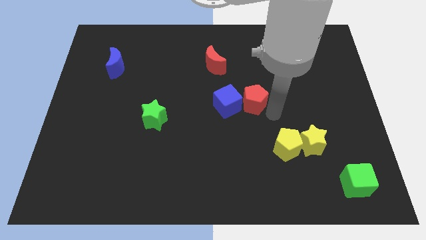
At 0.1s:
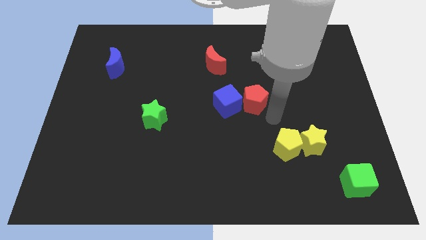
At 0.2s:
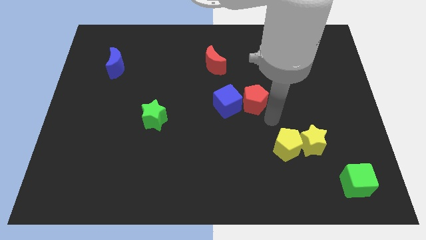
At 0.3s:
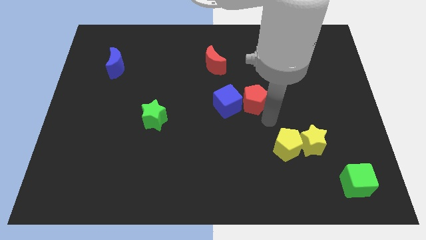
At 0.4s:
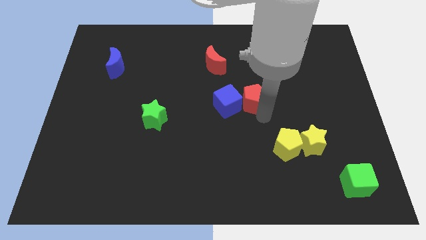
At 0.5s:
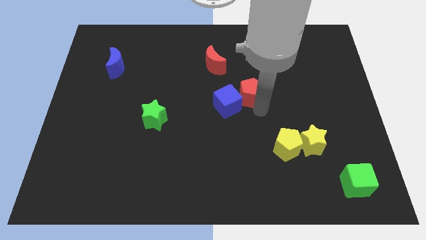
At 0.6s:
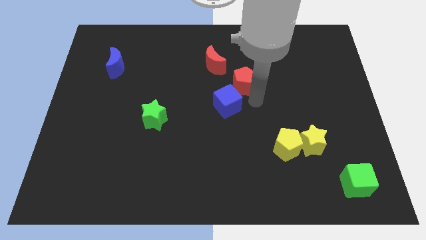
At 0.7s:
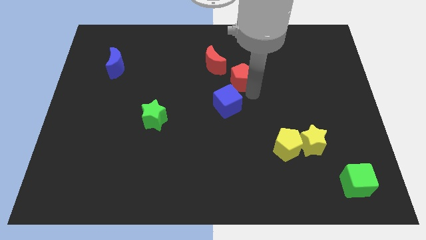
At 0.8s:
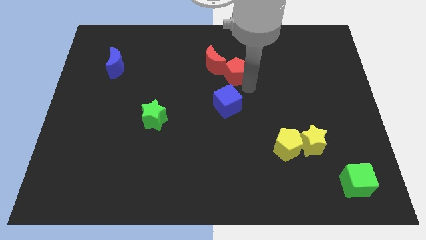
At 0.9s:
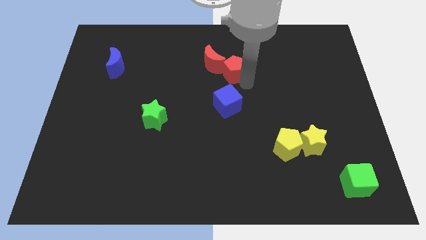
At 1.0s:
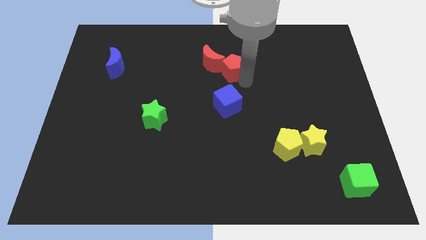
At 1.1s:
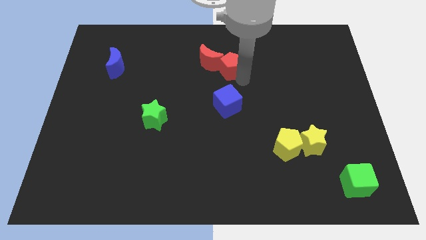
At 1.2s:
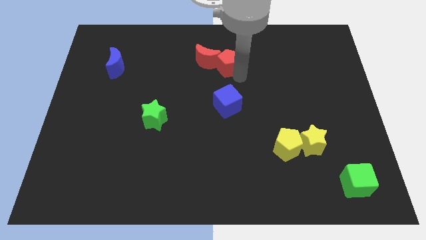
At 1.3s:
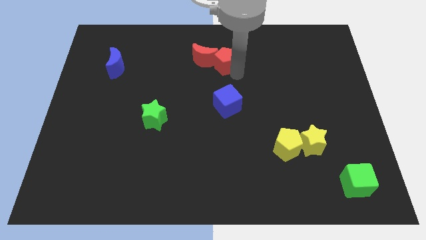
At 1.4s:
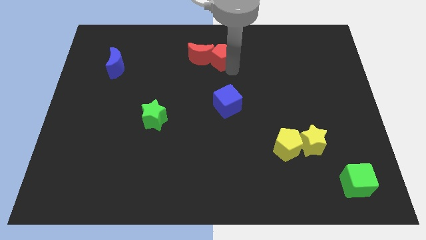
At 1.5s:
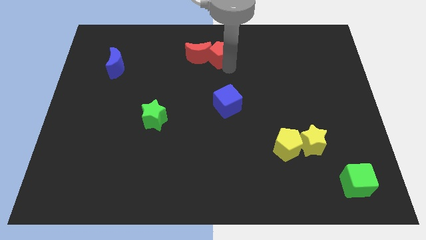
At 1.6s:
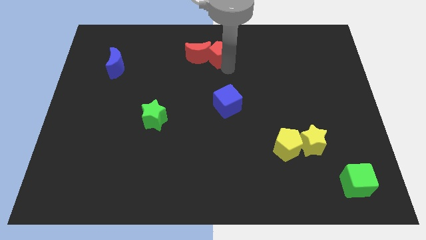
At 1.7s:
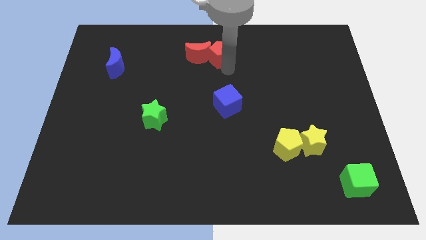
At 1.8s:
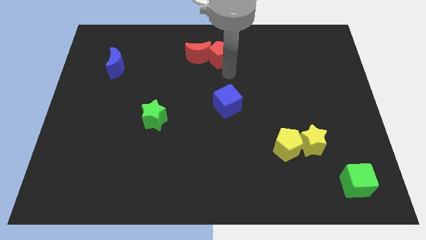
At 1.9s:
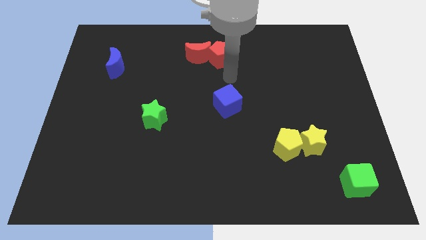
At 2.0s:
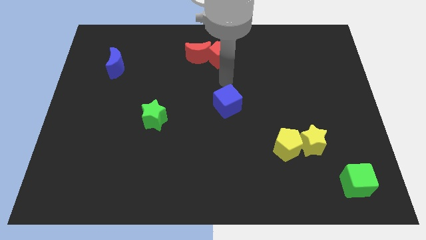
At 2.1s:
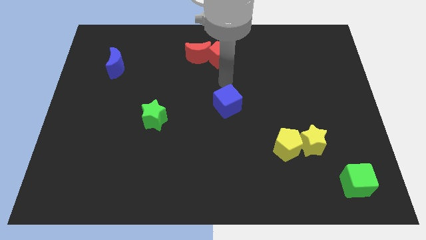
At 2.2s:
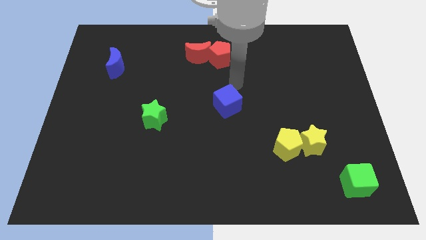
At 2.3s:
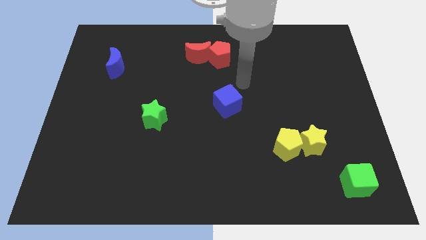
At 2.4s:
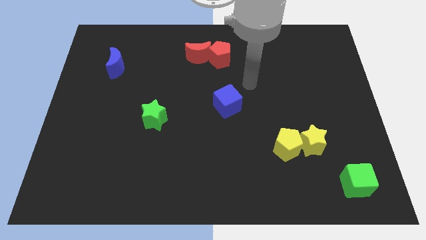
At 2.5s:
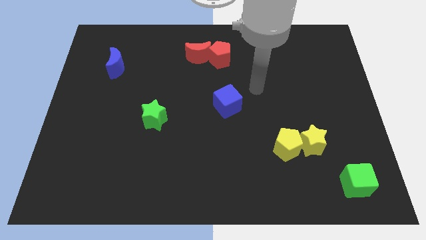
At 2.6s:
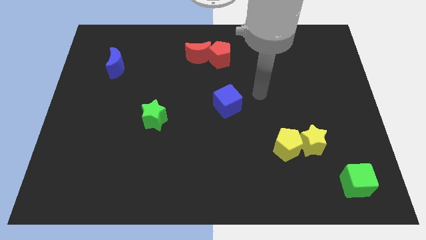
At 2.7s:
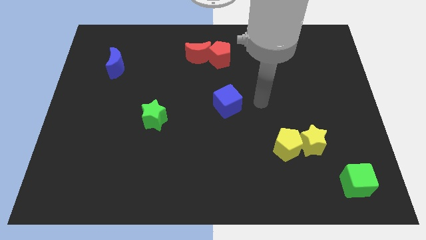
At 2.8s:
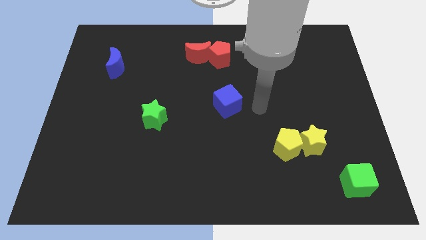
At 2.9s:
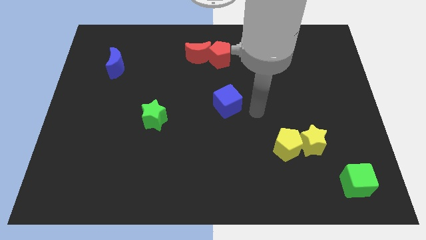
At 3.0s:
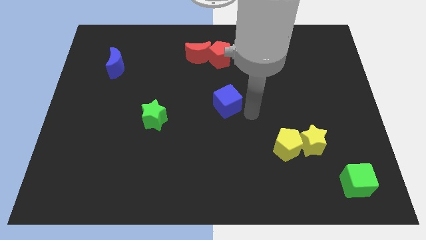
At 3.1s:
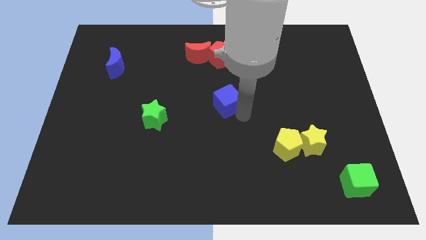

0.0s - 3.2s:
place red pentagon to the right side of red moon

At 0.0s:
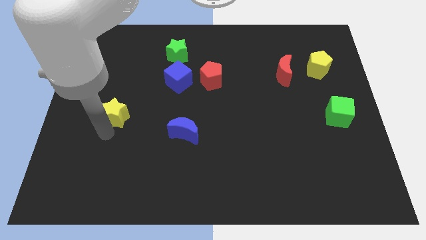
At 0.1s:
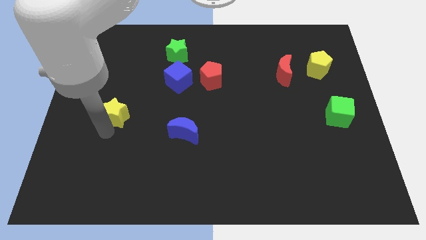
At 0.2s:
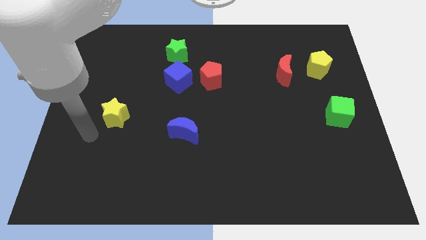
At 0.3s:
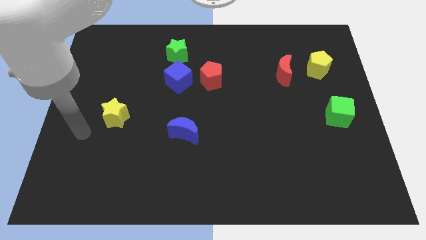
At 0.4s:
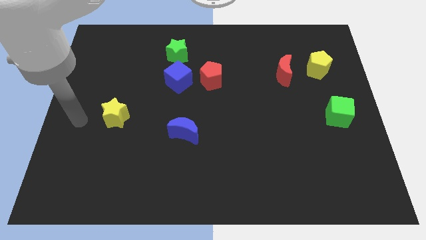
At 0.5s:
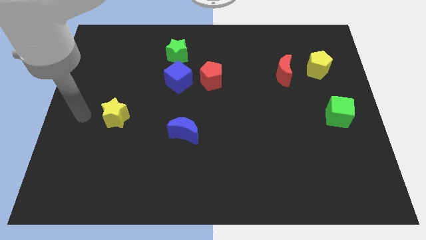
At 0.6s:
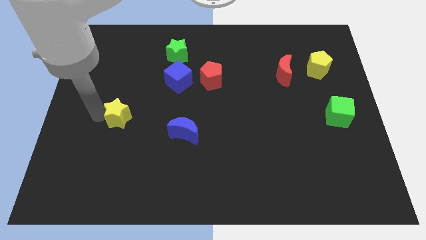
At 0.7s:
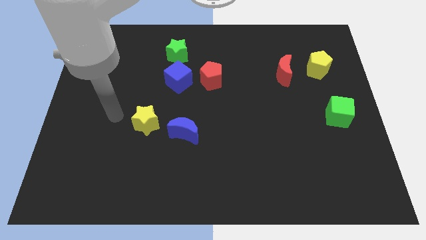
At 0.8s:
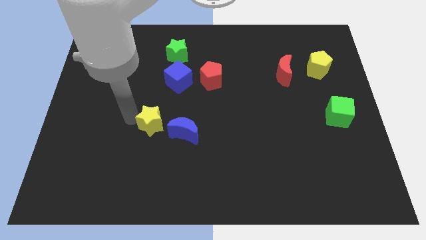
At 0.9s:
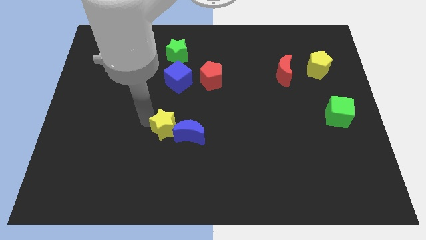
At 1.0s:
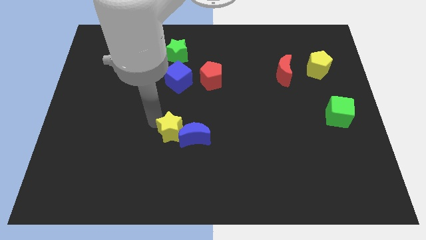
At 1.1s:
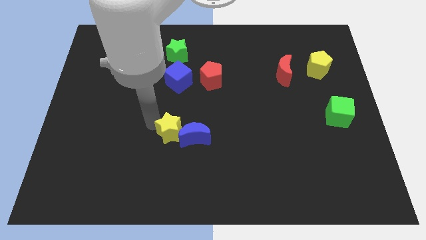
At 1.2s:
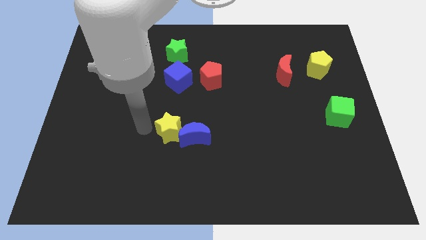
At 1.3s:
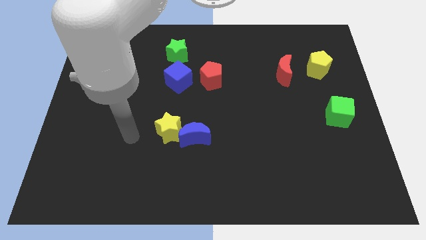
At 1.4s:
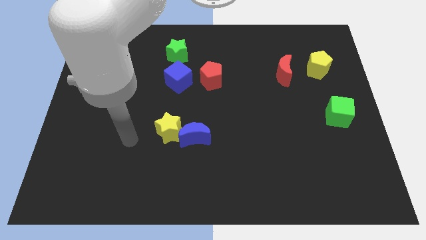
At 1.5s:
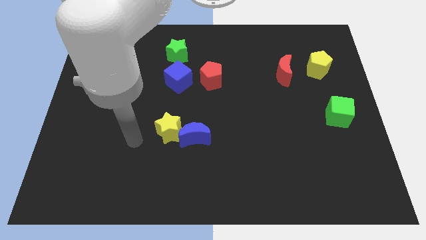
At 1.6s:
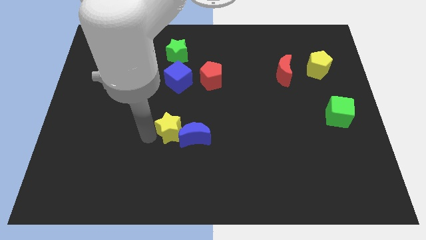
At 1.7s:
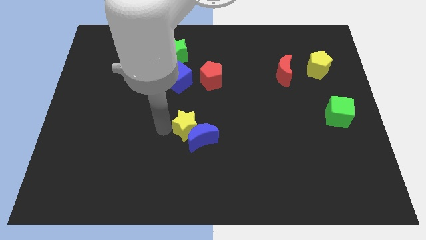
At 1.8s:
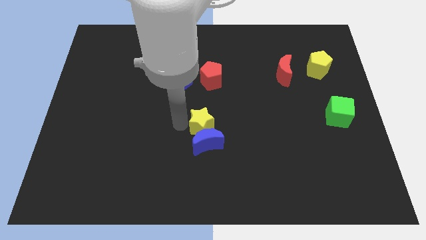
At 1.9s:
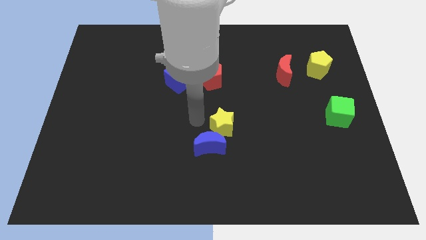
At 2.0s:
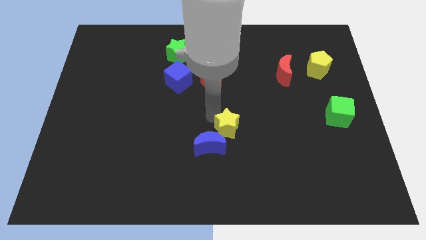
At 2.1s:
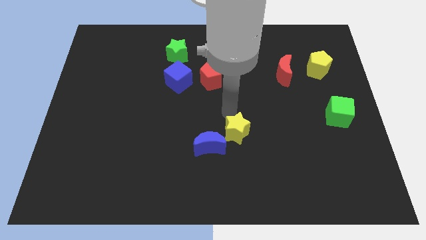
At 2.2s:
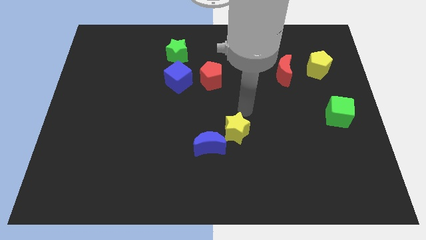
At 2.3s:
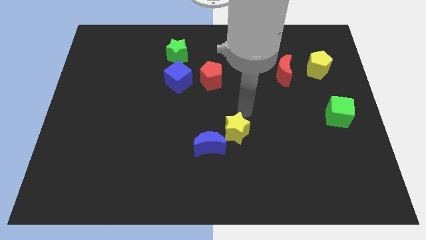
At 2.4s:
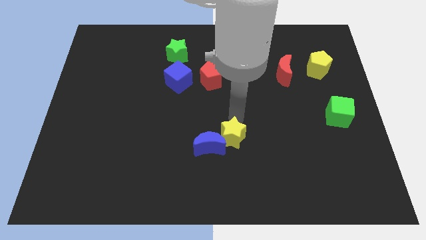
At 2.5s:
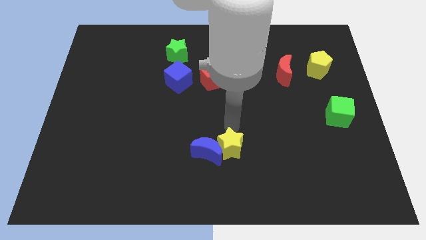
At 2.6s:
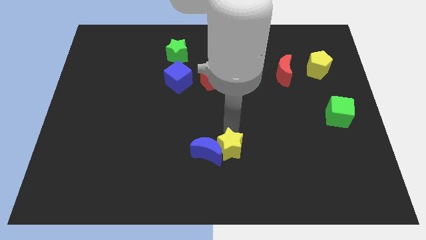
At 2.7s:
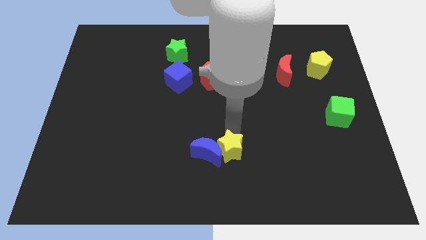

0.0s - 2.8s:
move the yellow star to the right of the blue crescent

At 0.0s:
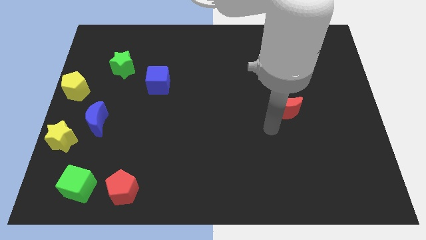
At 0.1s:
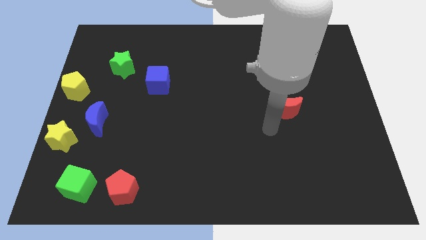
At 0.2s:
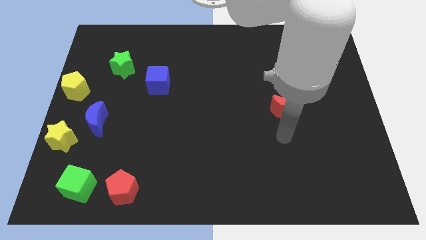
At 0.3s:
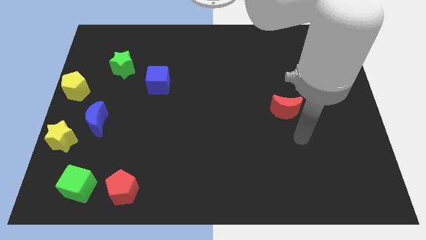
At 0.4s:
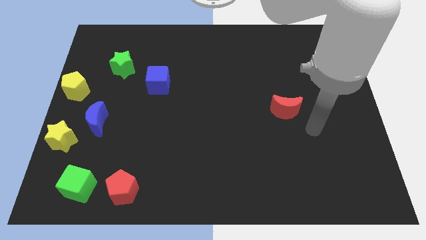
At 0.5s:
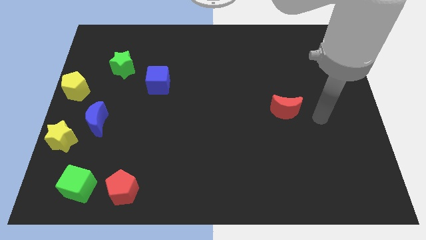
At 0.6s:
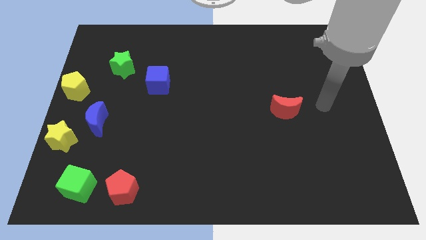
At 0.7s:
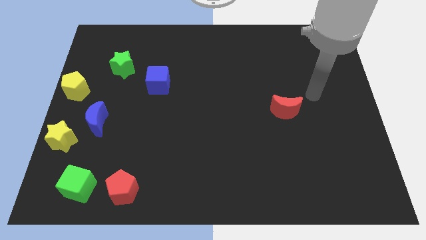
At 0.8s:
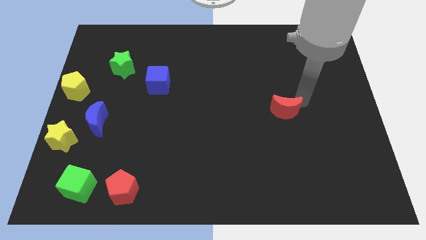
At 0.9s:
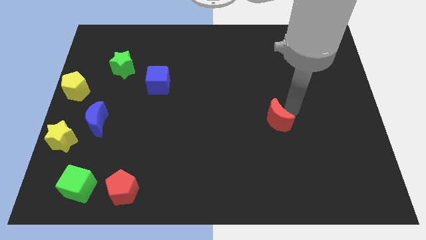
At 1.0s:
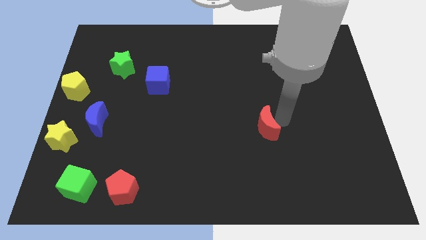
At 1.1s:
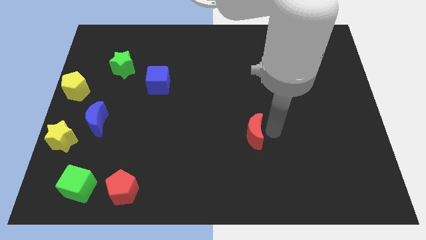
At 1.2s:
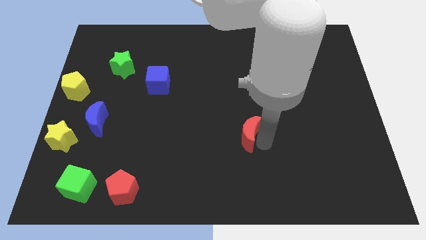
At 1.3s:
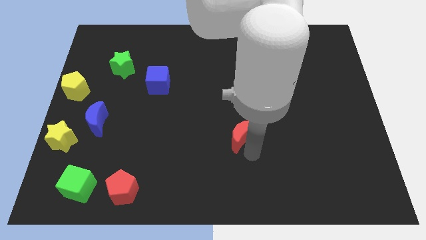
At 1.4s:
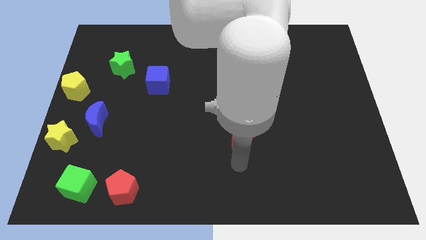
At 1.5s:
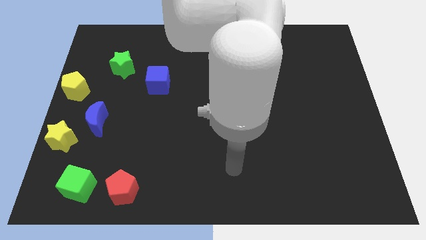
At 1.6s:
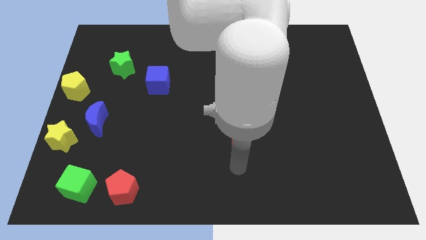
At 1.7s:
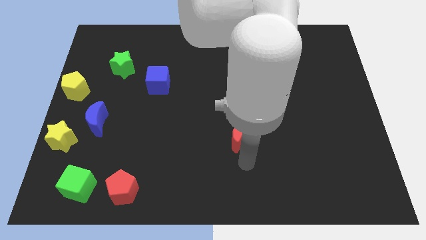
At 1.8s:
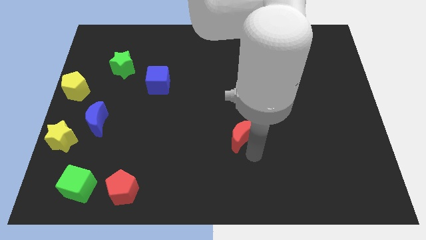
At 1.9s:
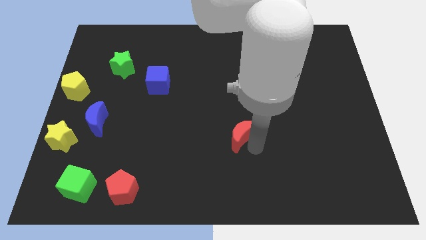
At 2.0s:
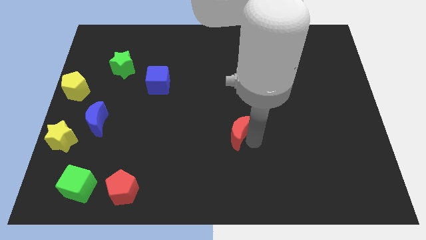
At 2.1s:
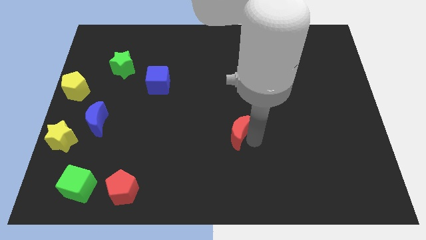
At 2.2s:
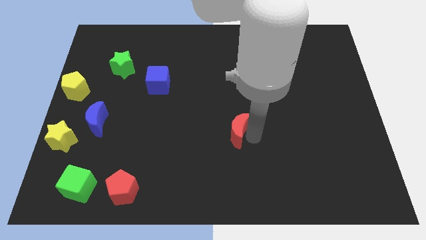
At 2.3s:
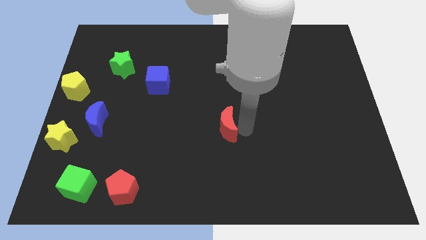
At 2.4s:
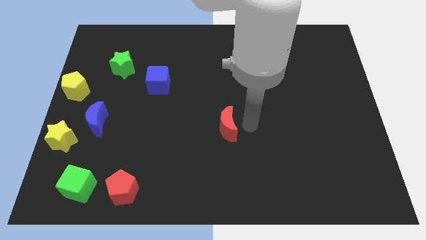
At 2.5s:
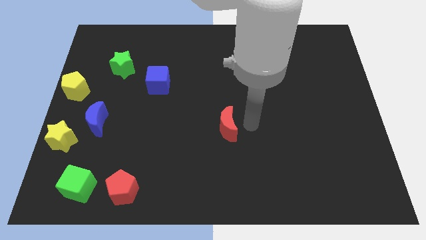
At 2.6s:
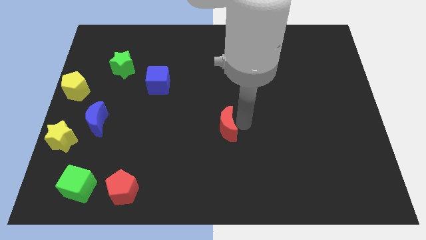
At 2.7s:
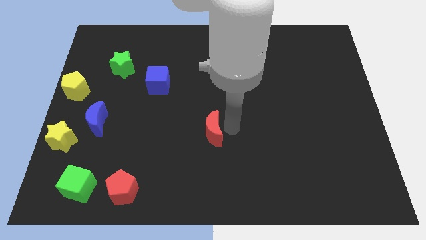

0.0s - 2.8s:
place the red moon at the center of the board
